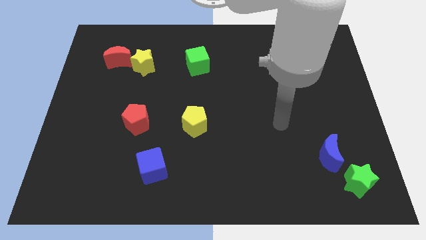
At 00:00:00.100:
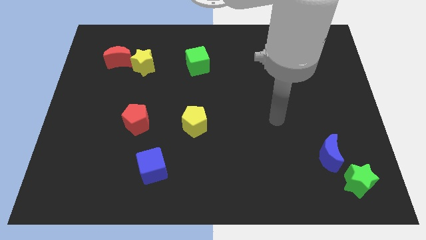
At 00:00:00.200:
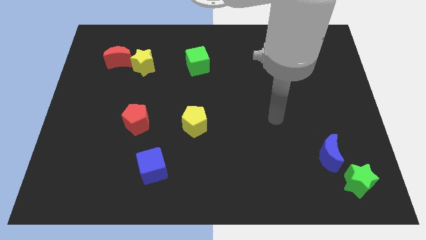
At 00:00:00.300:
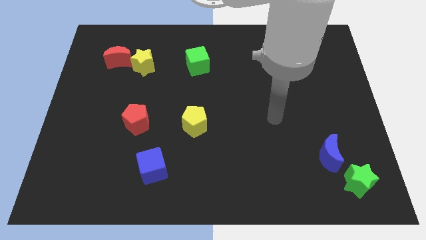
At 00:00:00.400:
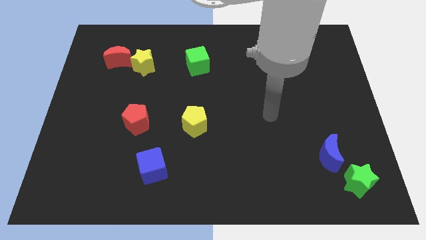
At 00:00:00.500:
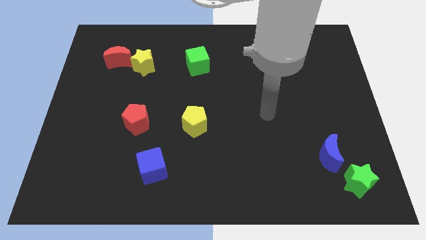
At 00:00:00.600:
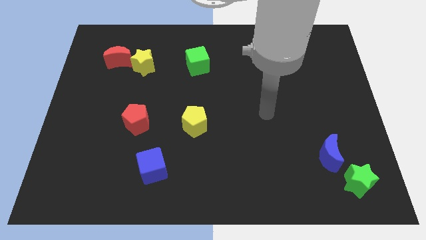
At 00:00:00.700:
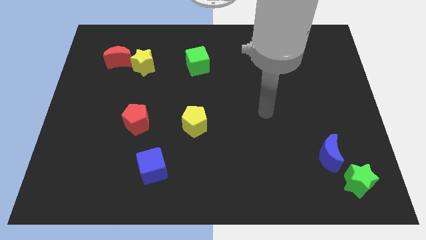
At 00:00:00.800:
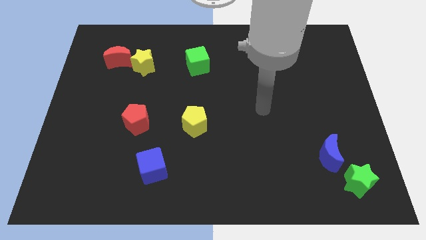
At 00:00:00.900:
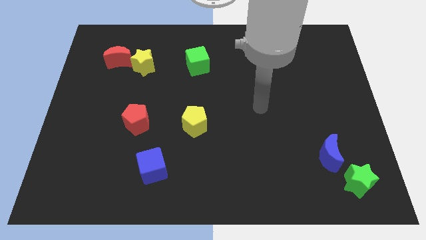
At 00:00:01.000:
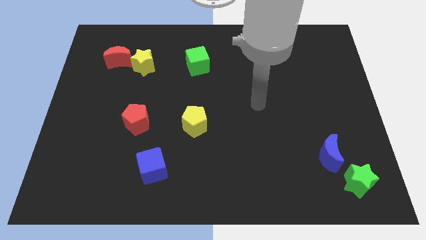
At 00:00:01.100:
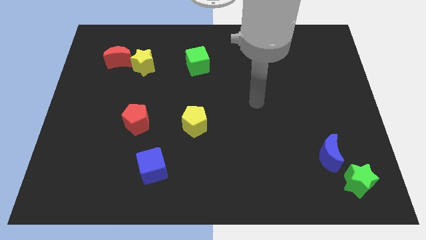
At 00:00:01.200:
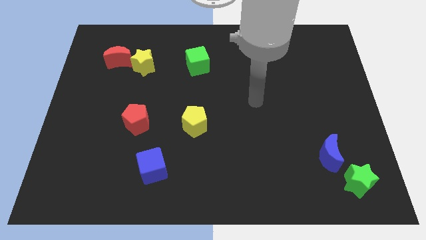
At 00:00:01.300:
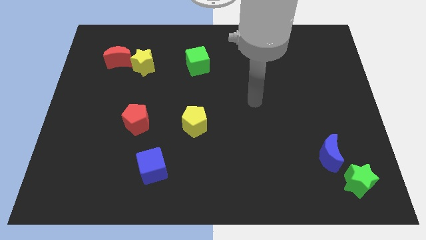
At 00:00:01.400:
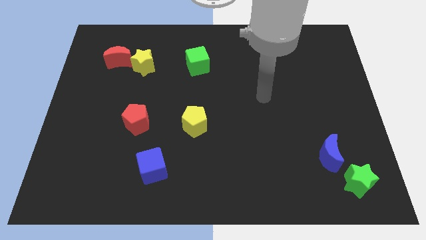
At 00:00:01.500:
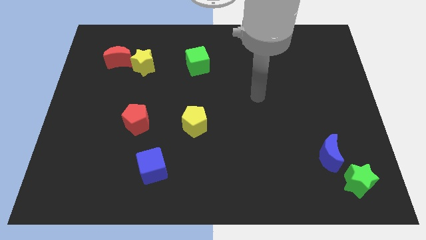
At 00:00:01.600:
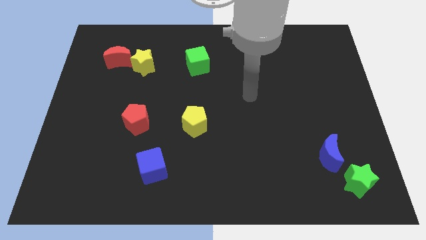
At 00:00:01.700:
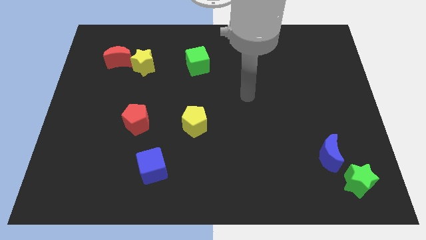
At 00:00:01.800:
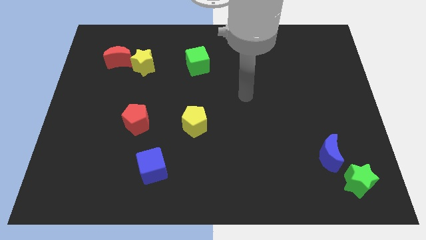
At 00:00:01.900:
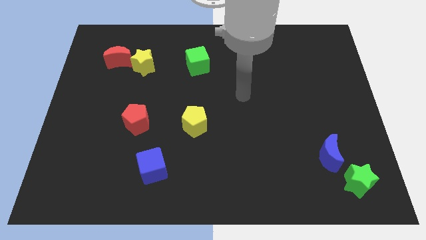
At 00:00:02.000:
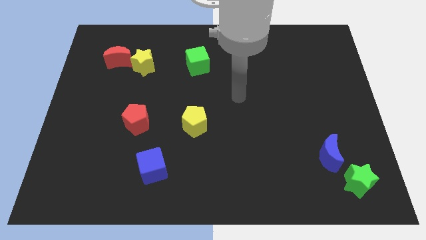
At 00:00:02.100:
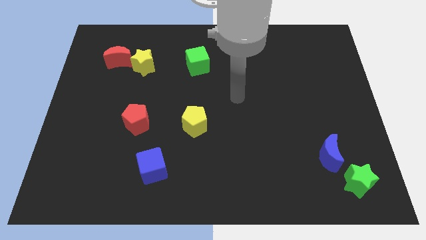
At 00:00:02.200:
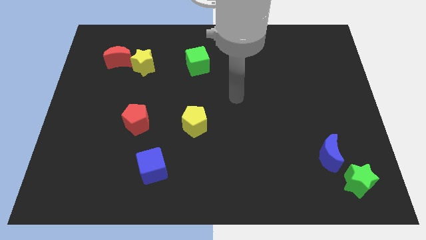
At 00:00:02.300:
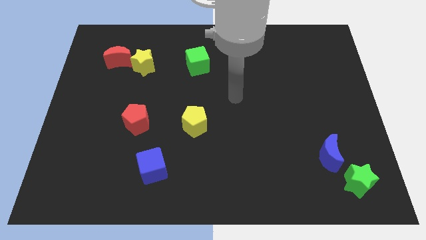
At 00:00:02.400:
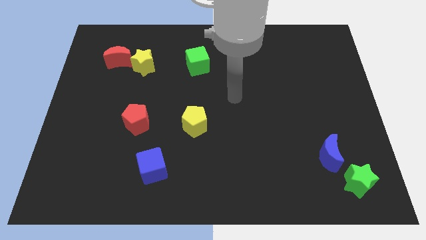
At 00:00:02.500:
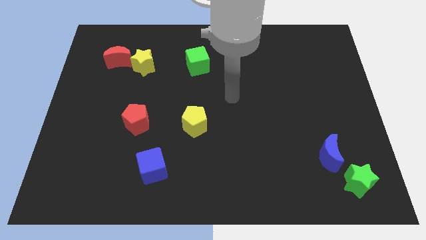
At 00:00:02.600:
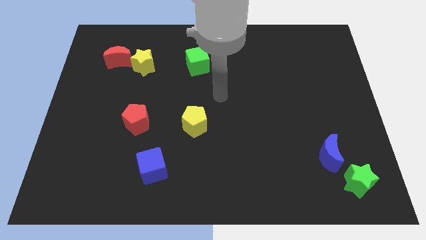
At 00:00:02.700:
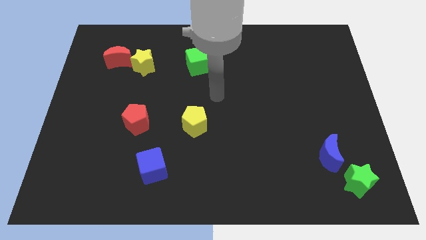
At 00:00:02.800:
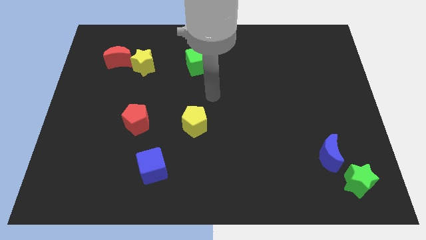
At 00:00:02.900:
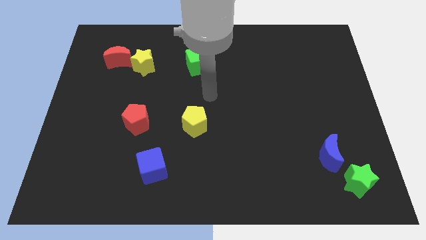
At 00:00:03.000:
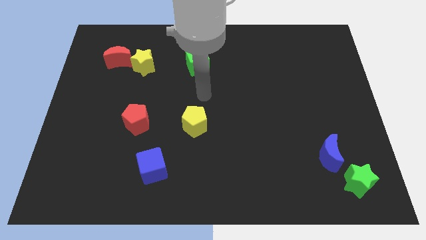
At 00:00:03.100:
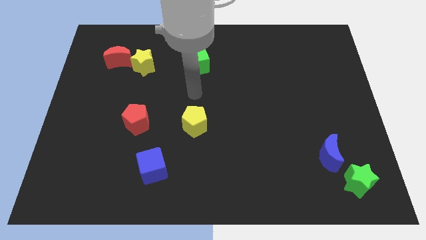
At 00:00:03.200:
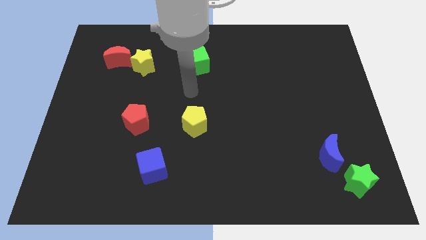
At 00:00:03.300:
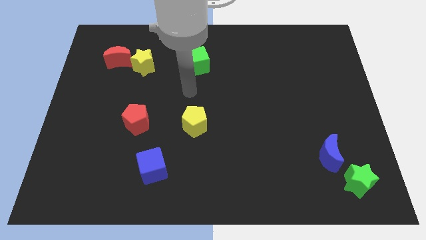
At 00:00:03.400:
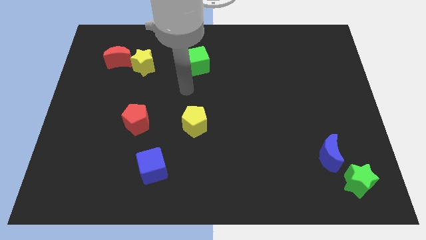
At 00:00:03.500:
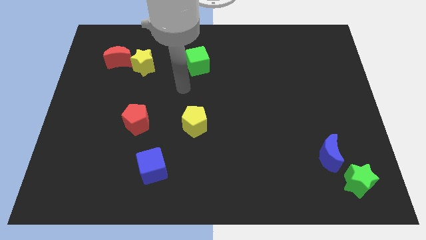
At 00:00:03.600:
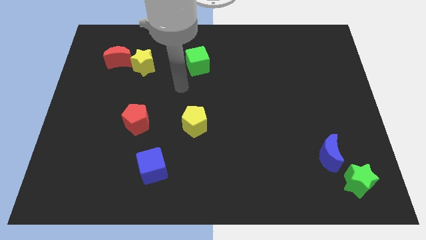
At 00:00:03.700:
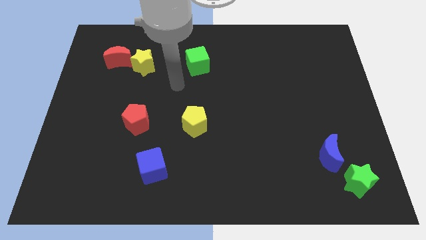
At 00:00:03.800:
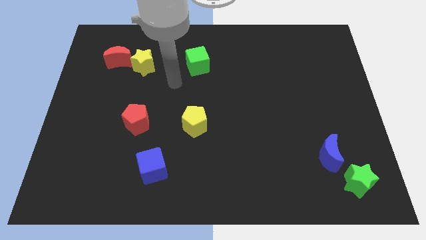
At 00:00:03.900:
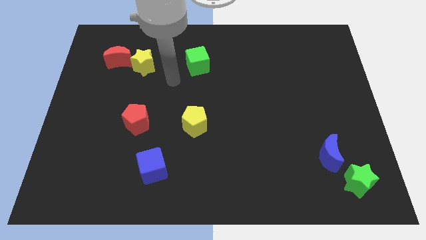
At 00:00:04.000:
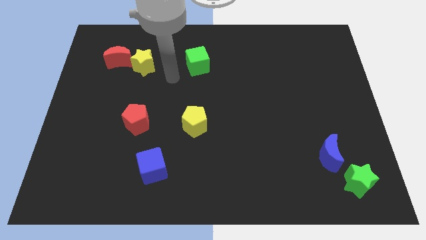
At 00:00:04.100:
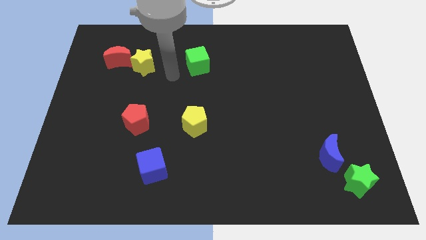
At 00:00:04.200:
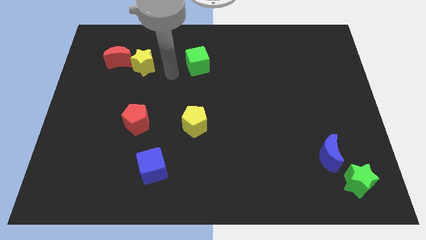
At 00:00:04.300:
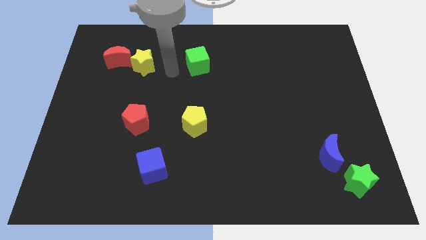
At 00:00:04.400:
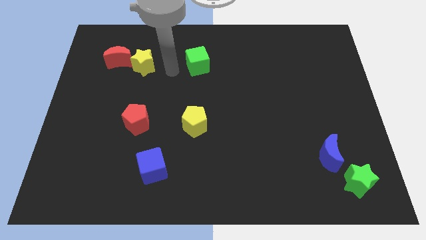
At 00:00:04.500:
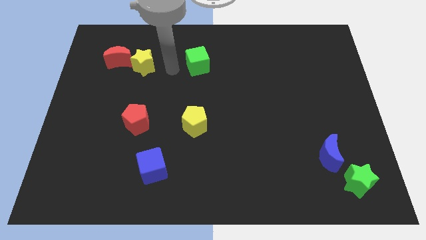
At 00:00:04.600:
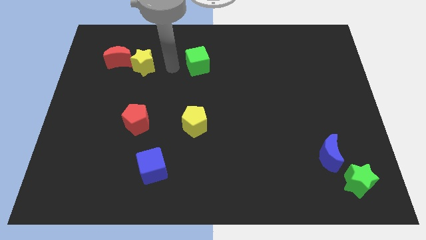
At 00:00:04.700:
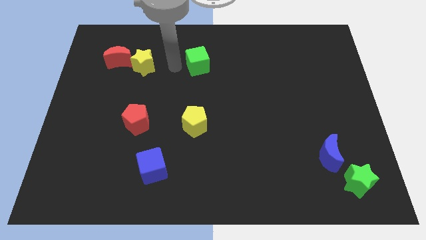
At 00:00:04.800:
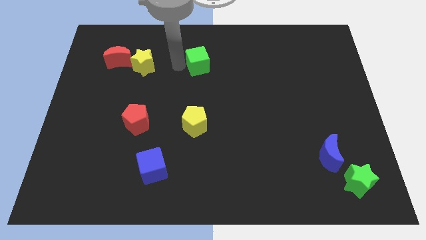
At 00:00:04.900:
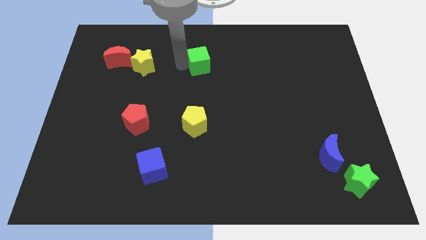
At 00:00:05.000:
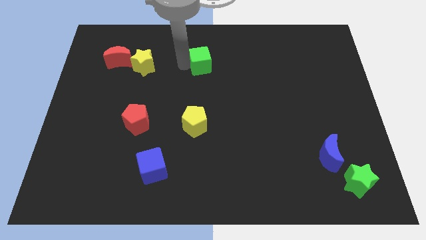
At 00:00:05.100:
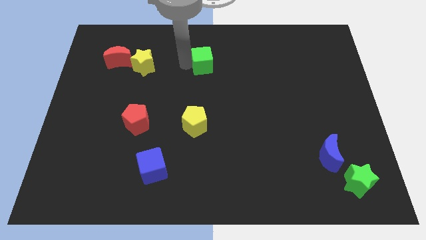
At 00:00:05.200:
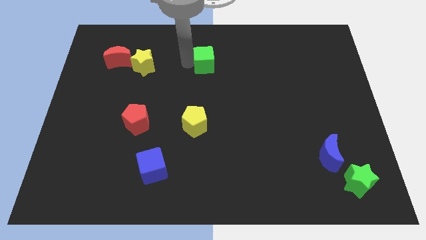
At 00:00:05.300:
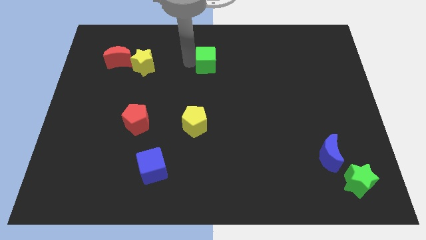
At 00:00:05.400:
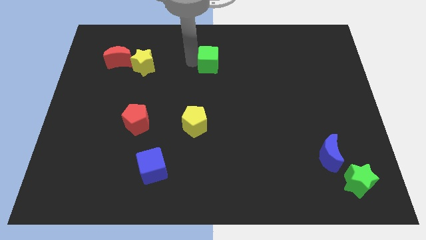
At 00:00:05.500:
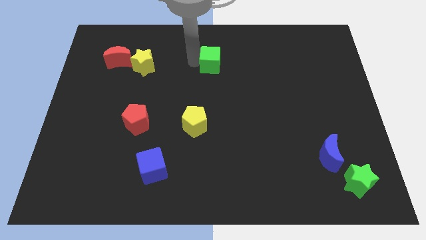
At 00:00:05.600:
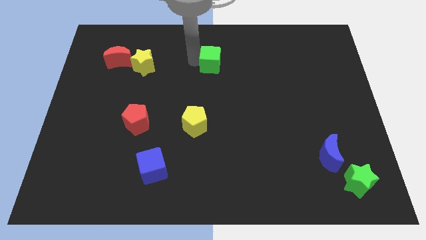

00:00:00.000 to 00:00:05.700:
move arm near green cube

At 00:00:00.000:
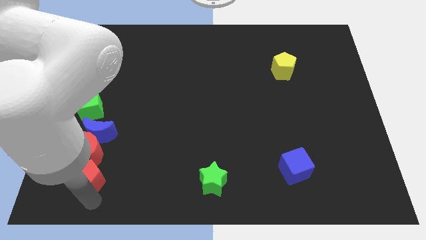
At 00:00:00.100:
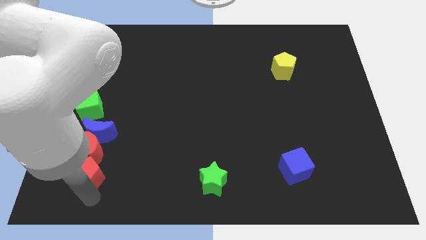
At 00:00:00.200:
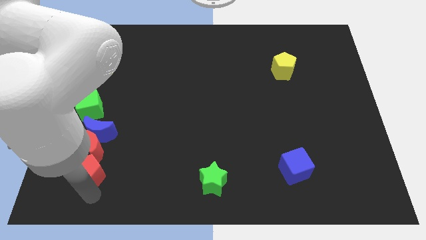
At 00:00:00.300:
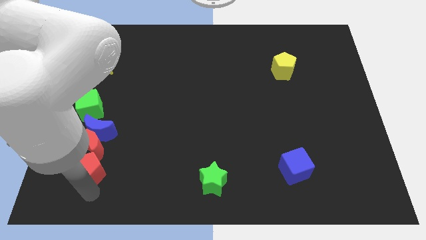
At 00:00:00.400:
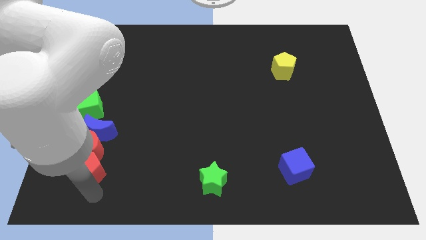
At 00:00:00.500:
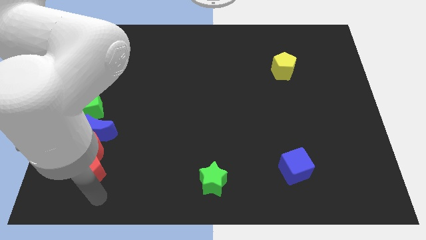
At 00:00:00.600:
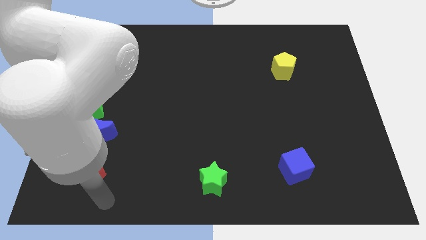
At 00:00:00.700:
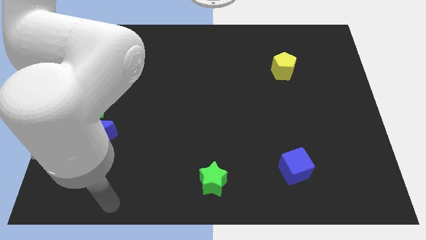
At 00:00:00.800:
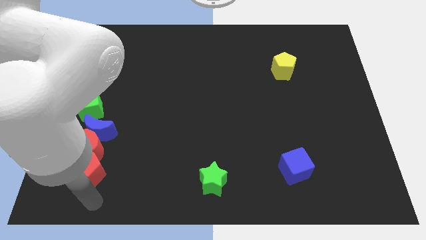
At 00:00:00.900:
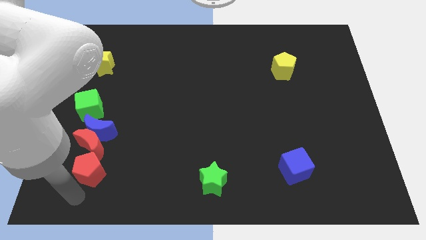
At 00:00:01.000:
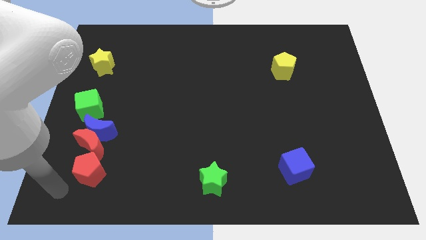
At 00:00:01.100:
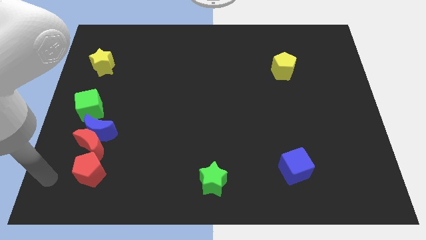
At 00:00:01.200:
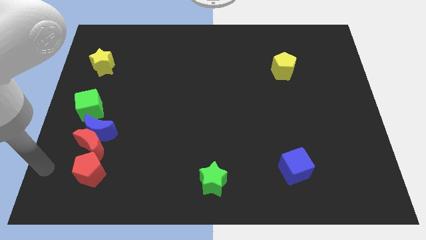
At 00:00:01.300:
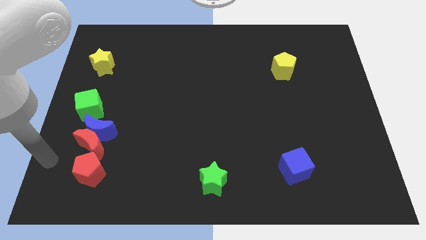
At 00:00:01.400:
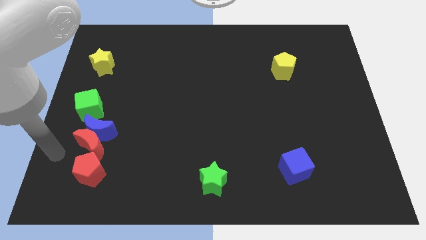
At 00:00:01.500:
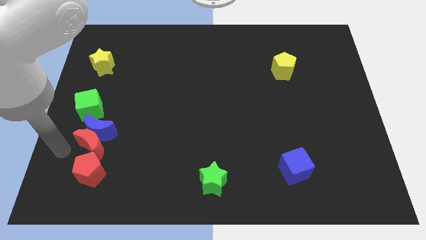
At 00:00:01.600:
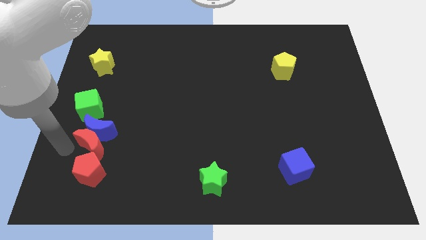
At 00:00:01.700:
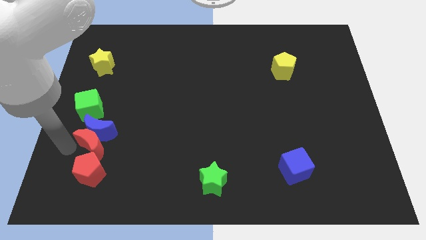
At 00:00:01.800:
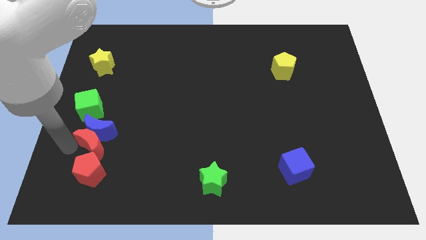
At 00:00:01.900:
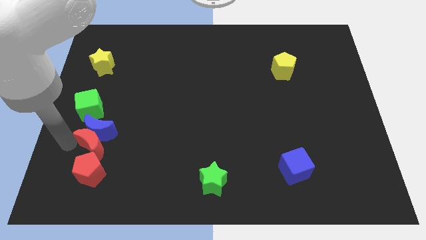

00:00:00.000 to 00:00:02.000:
drag the arm towards the left side of the red crescent

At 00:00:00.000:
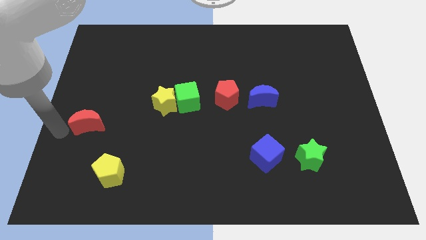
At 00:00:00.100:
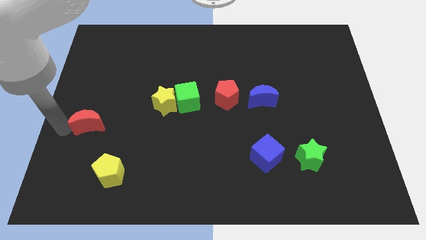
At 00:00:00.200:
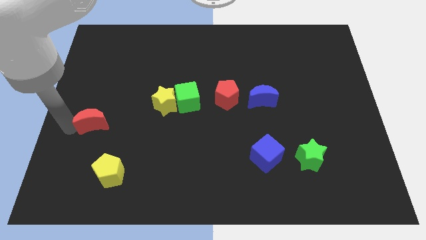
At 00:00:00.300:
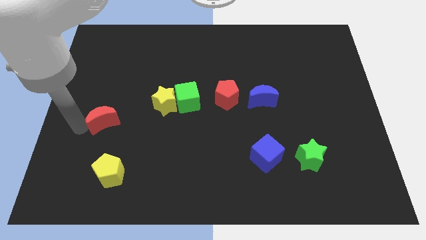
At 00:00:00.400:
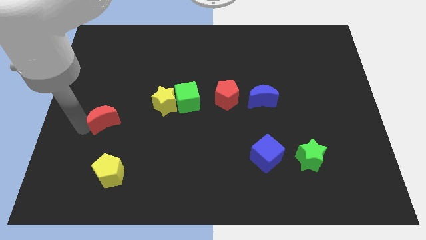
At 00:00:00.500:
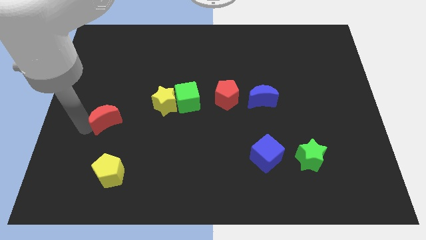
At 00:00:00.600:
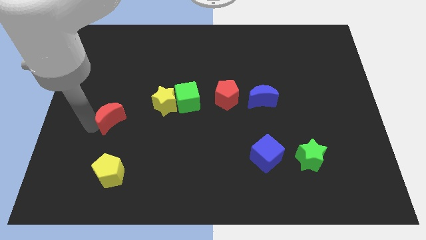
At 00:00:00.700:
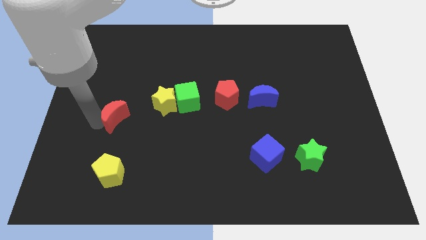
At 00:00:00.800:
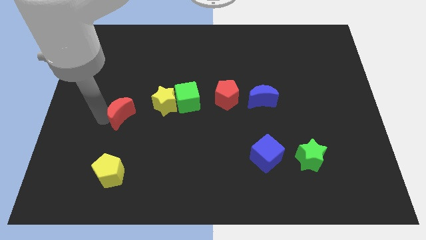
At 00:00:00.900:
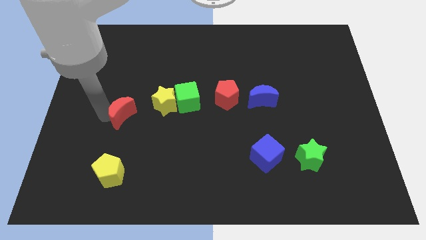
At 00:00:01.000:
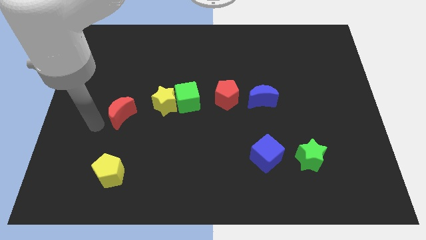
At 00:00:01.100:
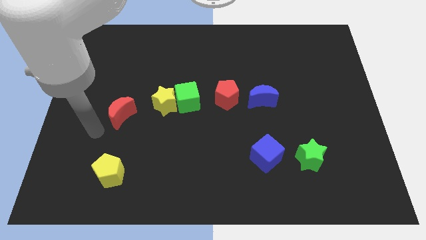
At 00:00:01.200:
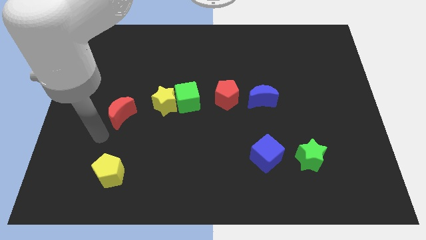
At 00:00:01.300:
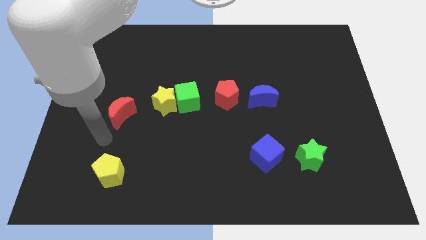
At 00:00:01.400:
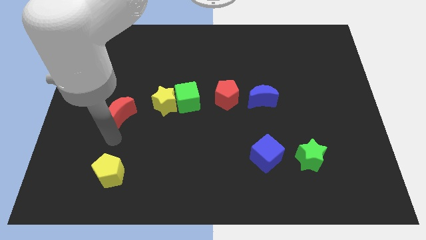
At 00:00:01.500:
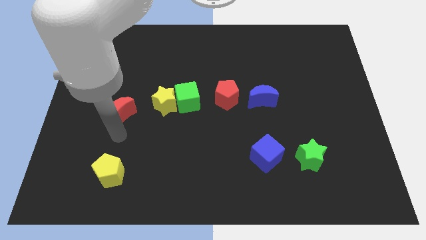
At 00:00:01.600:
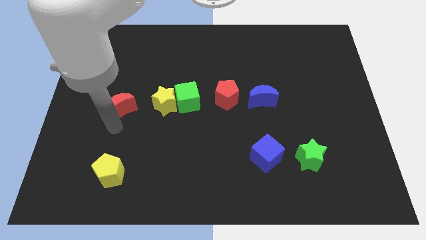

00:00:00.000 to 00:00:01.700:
push the red moon vertically above the yellow pentagon
